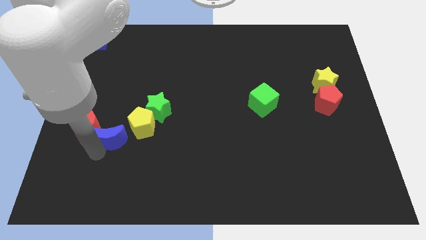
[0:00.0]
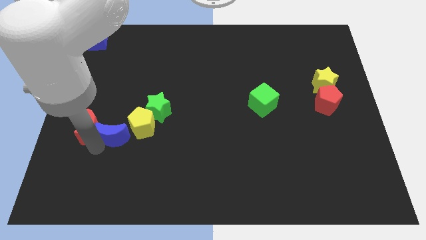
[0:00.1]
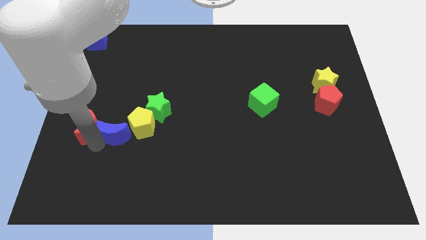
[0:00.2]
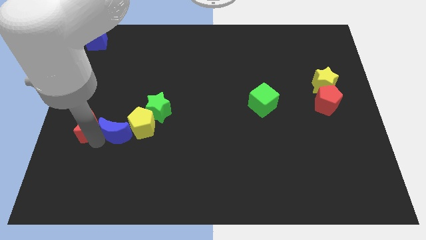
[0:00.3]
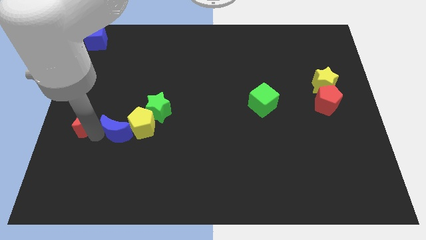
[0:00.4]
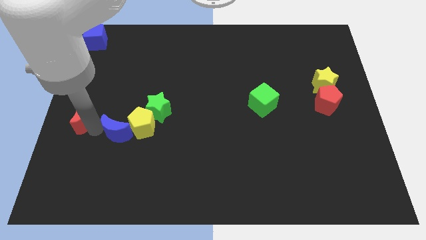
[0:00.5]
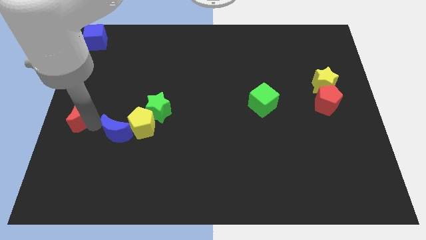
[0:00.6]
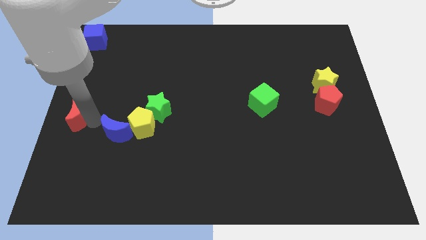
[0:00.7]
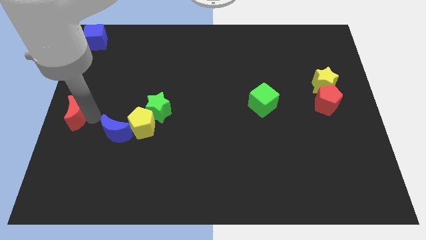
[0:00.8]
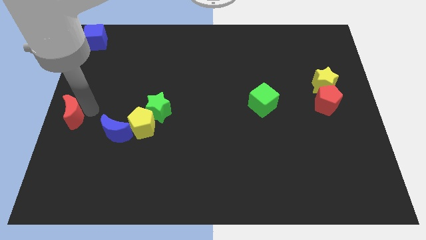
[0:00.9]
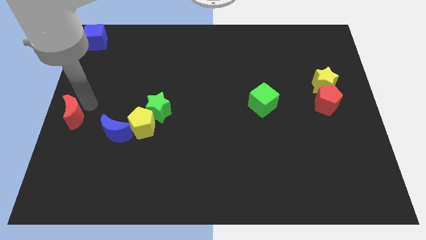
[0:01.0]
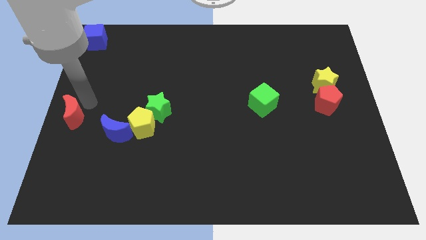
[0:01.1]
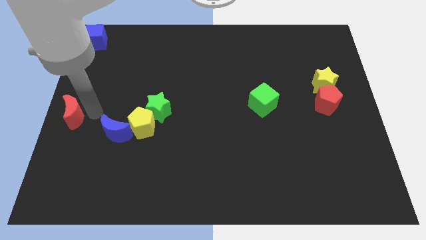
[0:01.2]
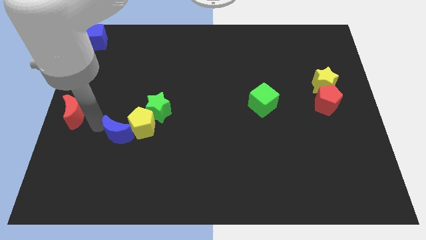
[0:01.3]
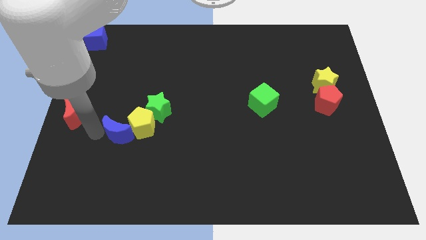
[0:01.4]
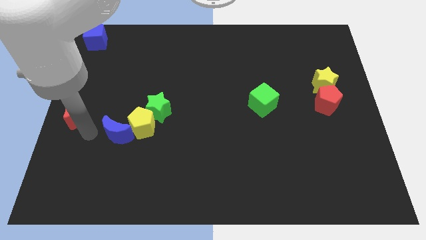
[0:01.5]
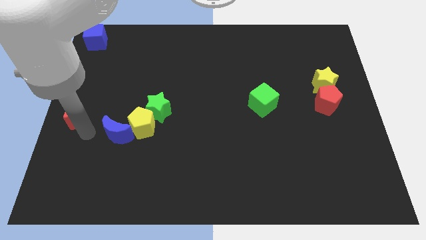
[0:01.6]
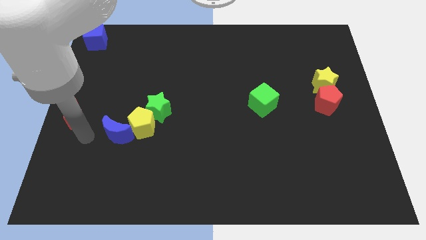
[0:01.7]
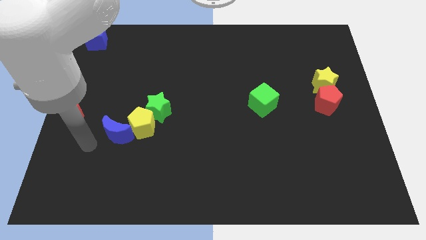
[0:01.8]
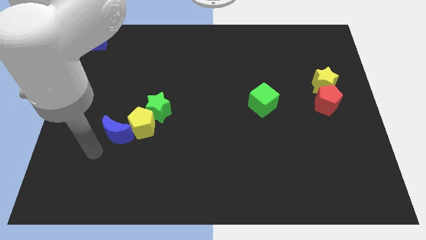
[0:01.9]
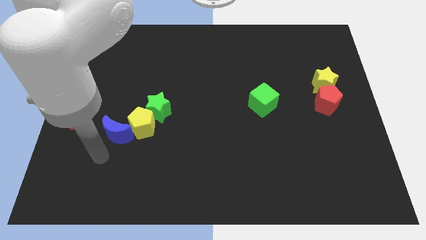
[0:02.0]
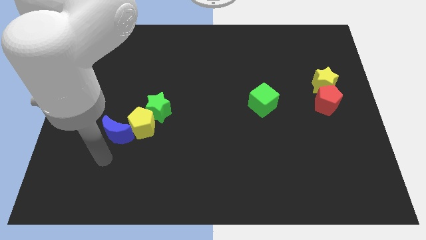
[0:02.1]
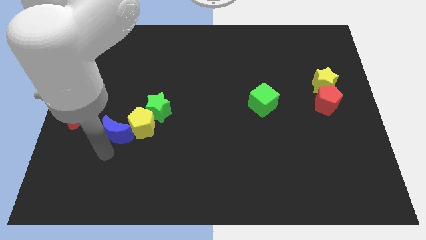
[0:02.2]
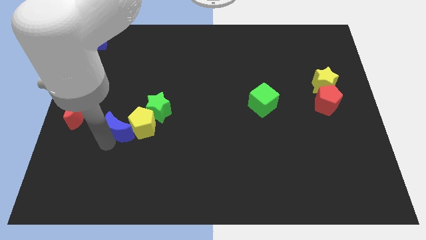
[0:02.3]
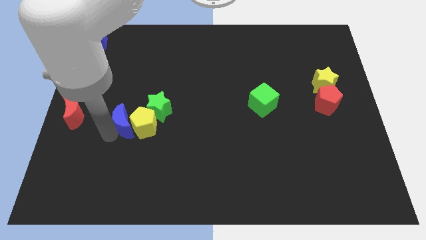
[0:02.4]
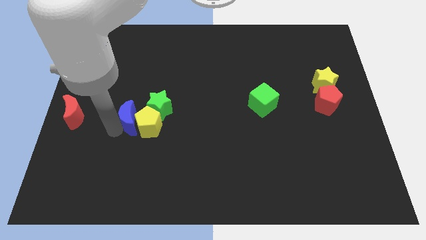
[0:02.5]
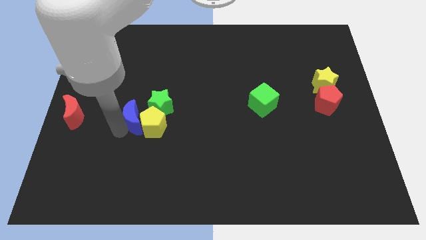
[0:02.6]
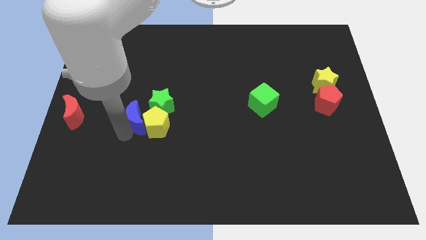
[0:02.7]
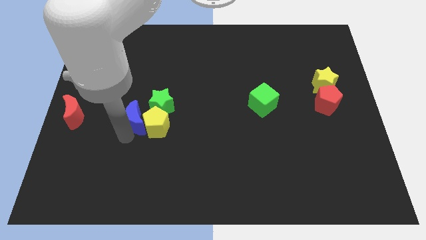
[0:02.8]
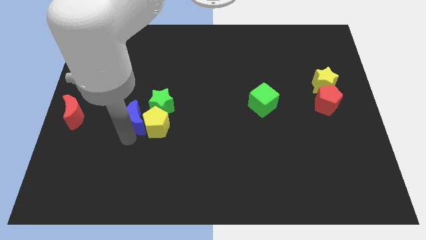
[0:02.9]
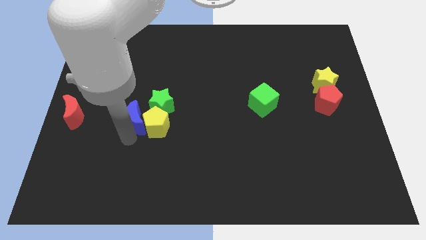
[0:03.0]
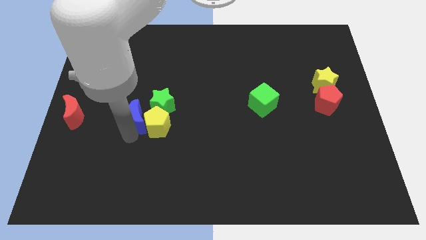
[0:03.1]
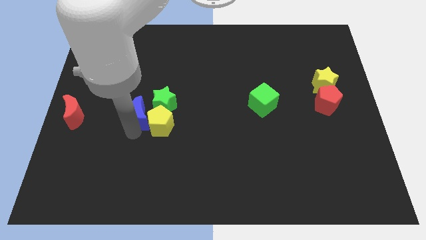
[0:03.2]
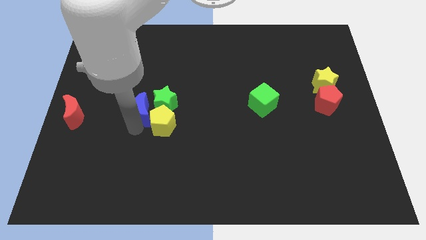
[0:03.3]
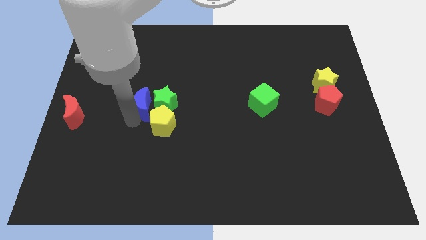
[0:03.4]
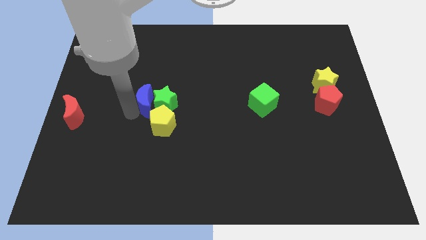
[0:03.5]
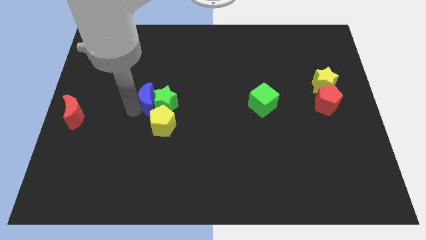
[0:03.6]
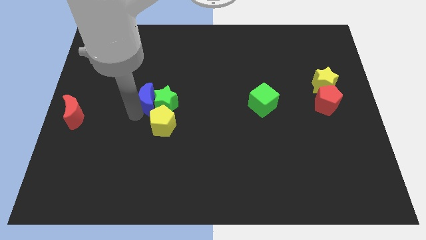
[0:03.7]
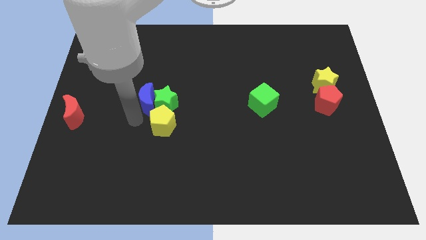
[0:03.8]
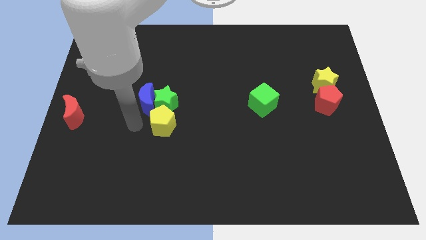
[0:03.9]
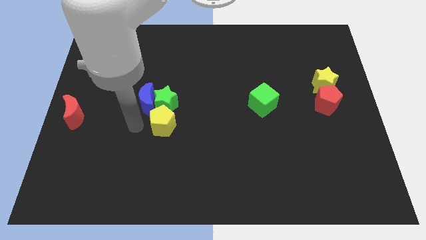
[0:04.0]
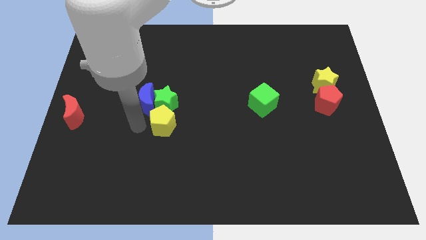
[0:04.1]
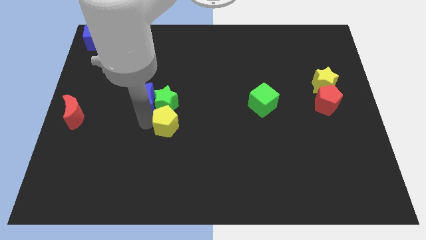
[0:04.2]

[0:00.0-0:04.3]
move the blue moon into the green star

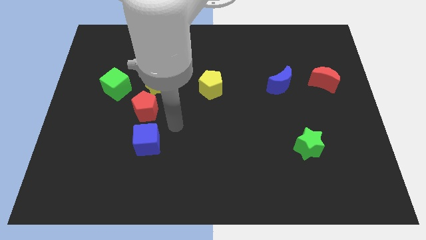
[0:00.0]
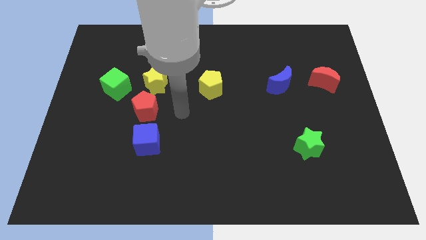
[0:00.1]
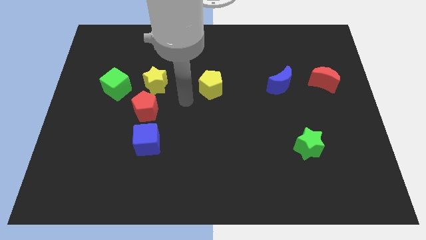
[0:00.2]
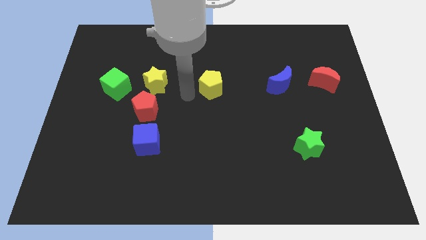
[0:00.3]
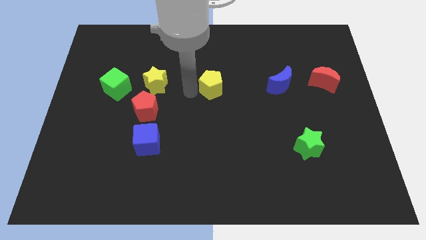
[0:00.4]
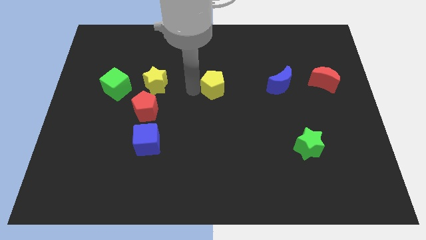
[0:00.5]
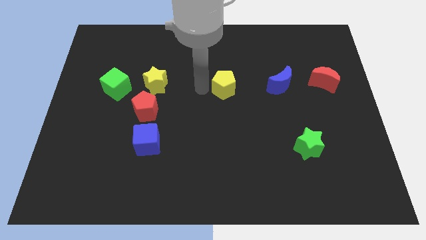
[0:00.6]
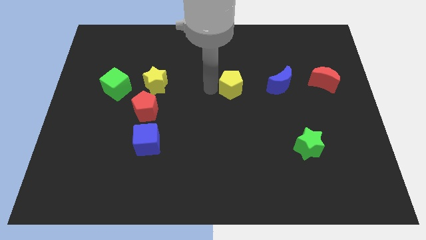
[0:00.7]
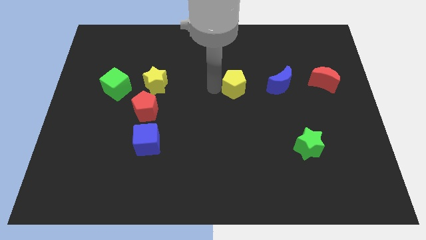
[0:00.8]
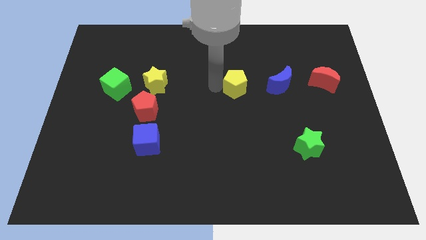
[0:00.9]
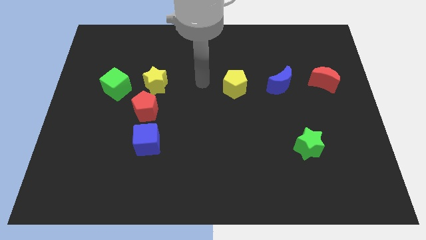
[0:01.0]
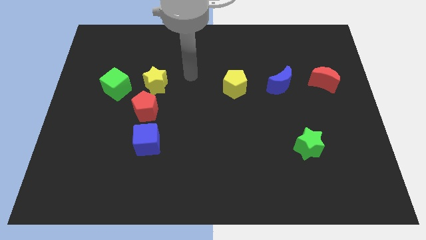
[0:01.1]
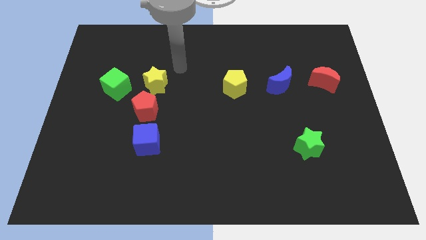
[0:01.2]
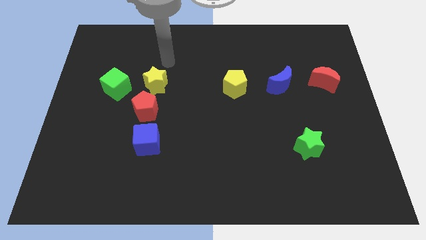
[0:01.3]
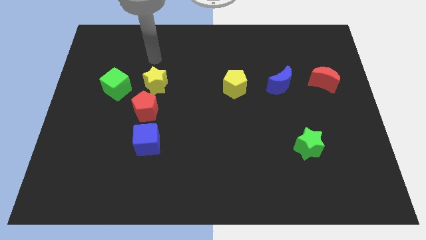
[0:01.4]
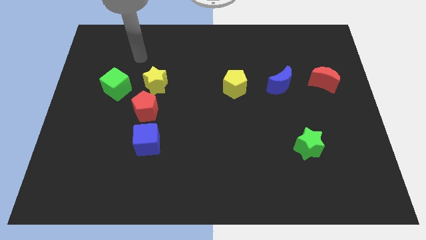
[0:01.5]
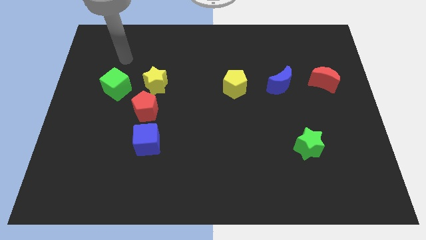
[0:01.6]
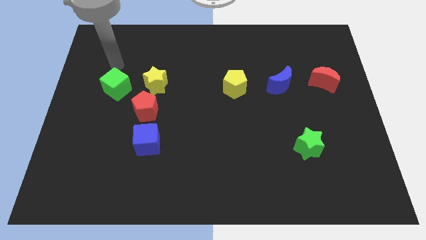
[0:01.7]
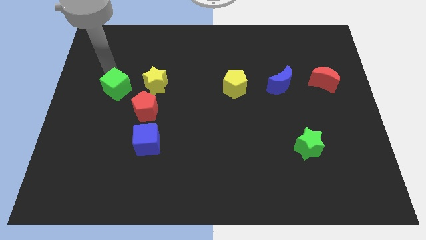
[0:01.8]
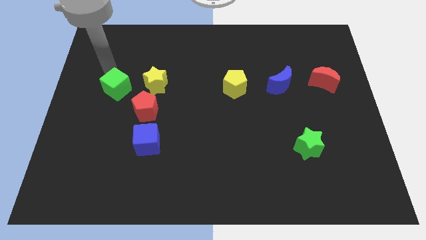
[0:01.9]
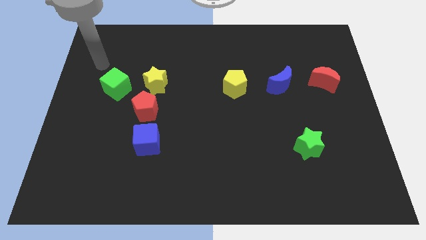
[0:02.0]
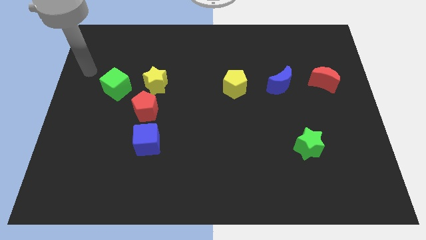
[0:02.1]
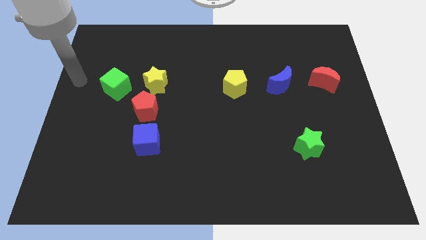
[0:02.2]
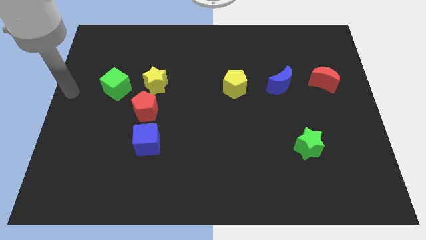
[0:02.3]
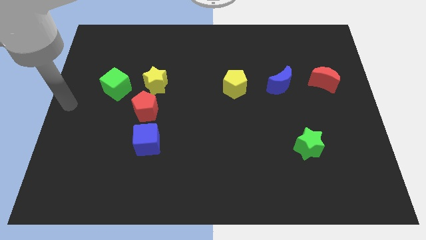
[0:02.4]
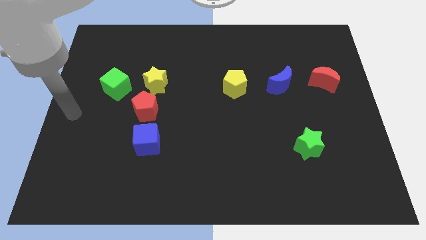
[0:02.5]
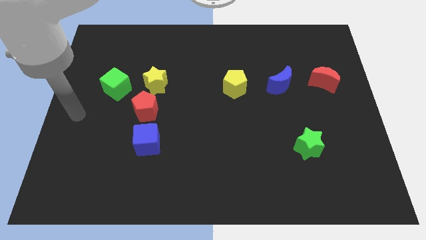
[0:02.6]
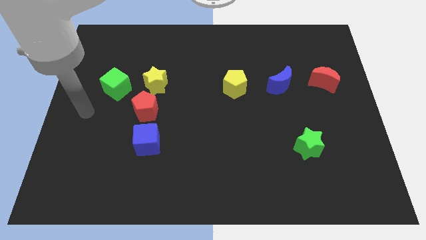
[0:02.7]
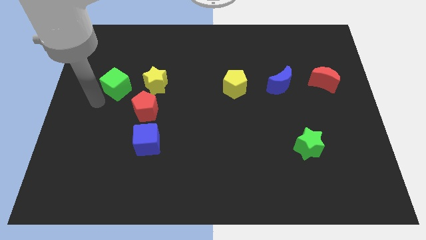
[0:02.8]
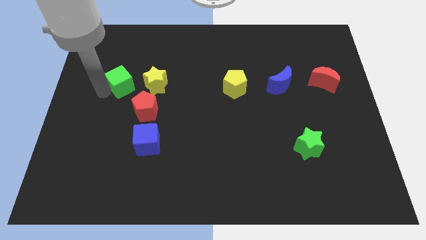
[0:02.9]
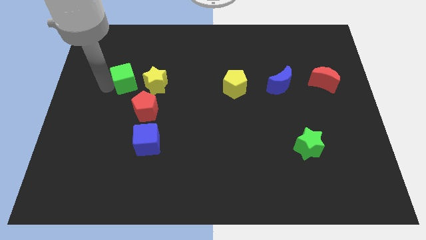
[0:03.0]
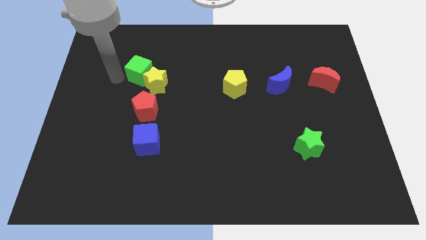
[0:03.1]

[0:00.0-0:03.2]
slightly move the yellow pentagon to the left of the blue crescent

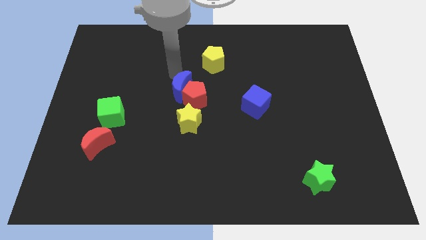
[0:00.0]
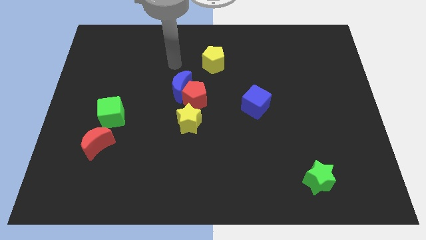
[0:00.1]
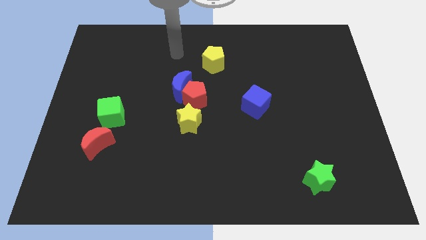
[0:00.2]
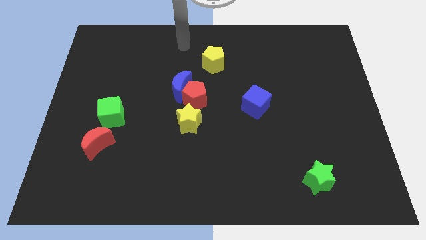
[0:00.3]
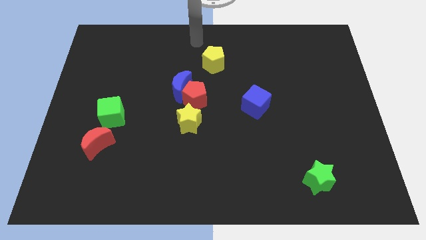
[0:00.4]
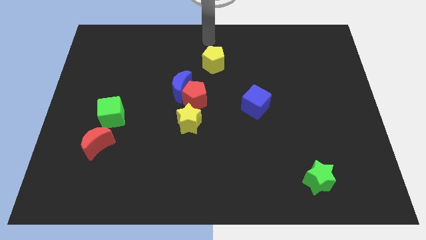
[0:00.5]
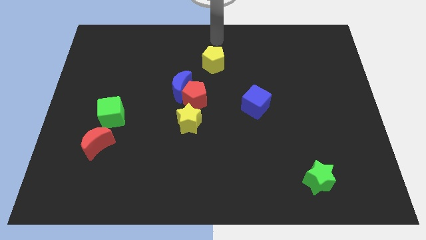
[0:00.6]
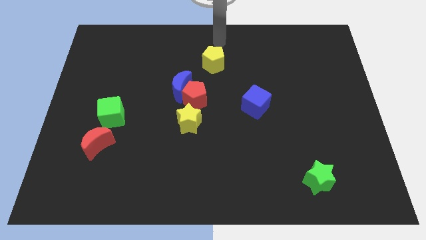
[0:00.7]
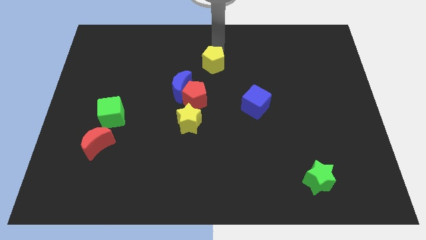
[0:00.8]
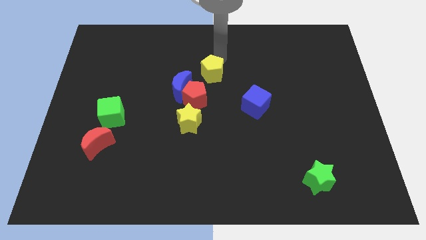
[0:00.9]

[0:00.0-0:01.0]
place the arm to the top of yellow pentagon

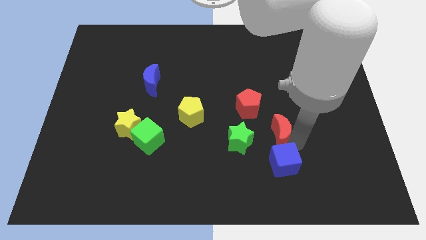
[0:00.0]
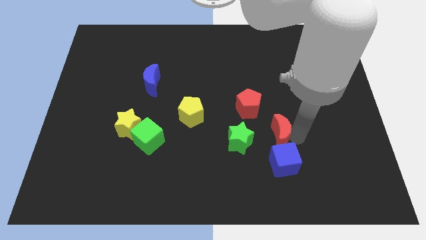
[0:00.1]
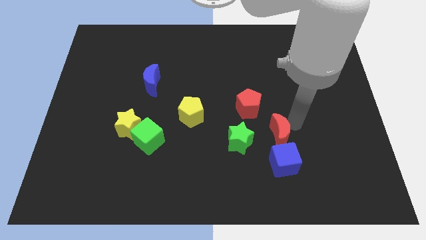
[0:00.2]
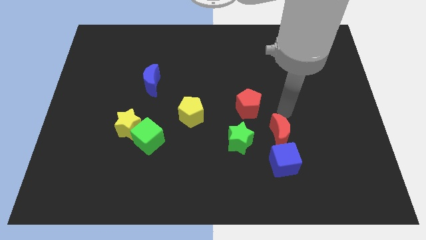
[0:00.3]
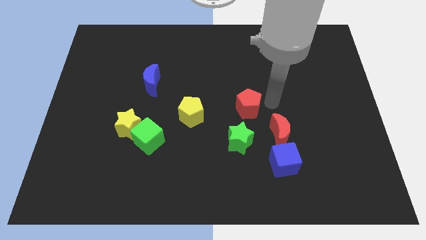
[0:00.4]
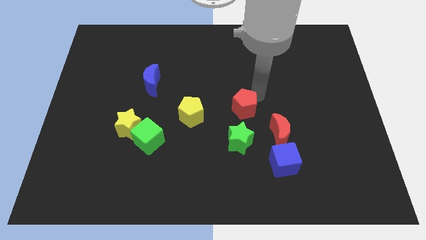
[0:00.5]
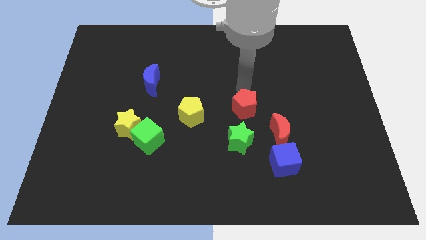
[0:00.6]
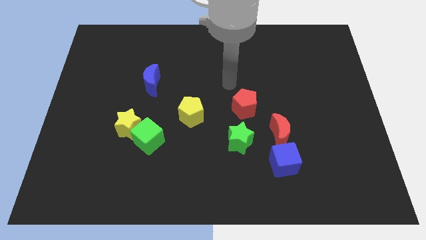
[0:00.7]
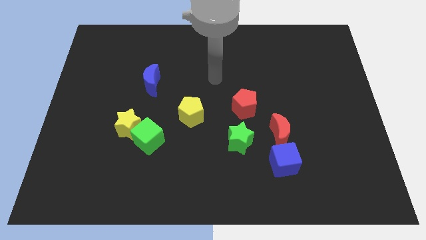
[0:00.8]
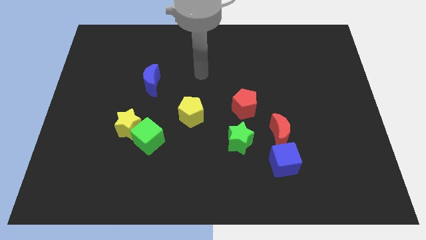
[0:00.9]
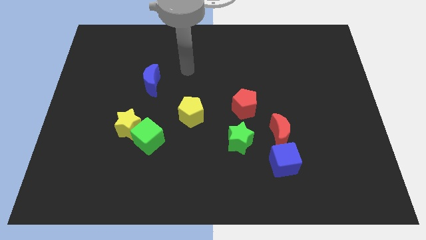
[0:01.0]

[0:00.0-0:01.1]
tap on the red pentagon
